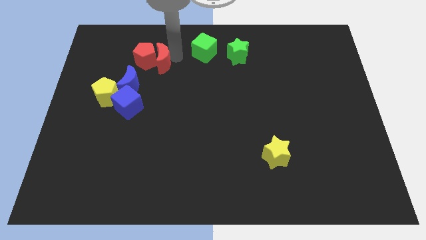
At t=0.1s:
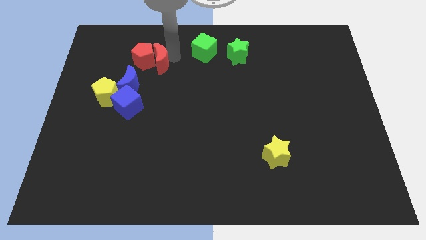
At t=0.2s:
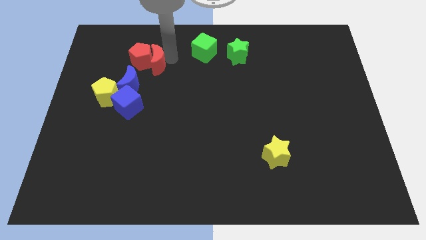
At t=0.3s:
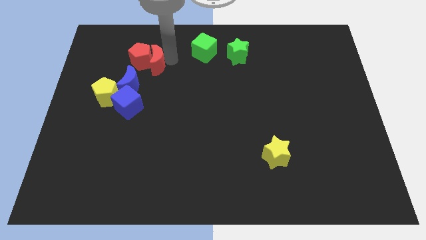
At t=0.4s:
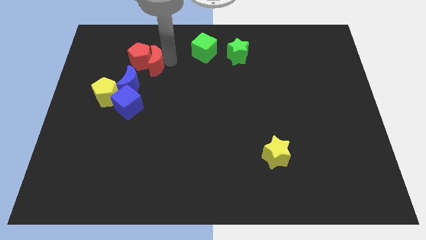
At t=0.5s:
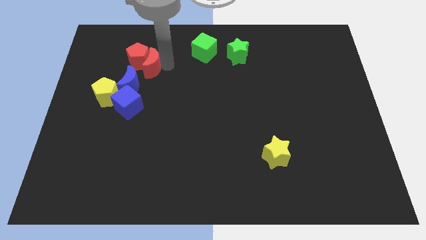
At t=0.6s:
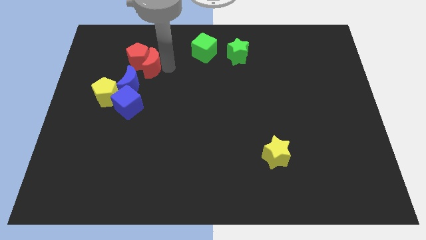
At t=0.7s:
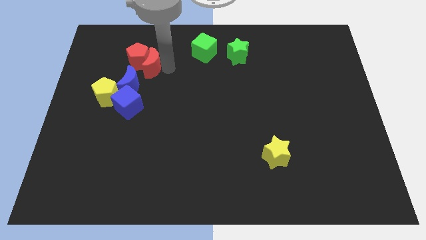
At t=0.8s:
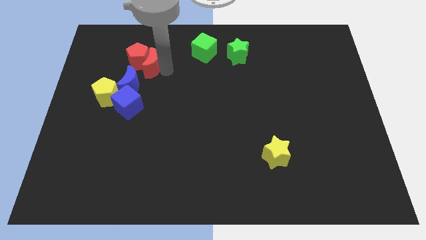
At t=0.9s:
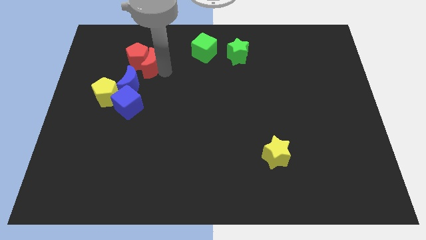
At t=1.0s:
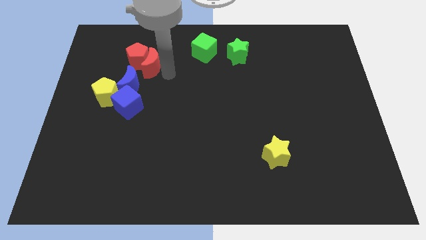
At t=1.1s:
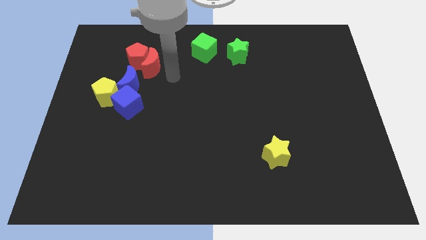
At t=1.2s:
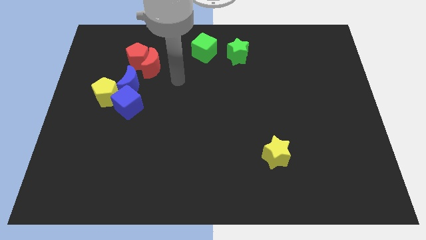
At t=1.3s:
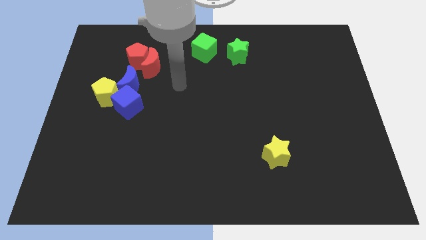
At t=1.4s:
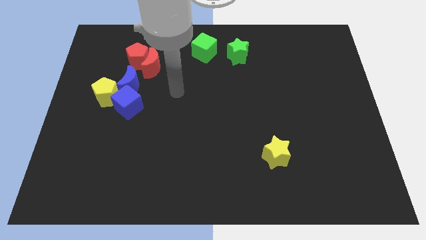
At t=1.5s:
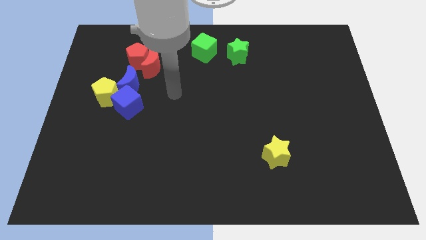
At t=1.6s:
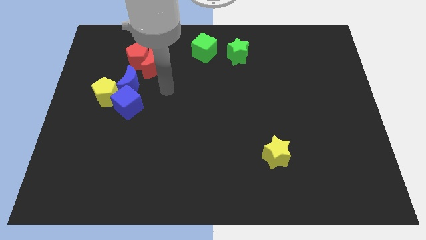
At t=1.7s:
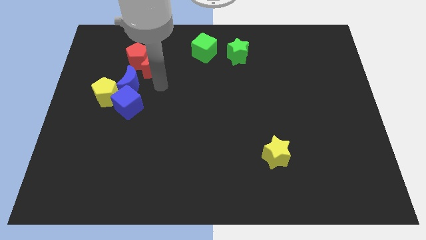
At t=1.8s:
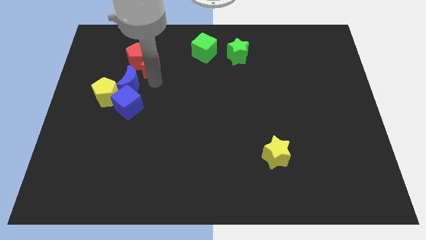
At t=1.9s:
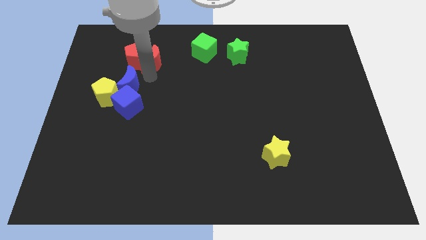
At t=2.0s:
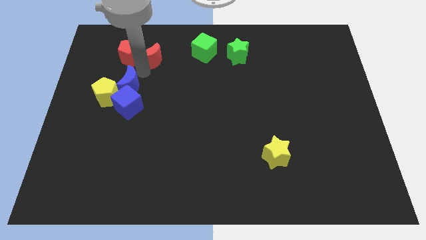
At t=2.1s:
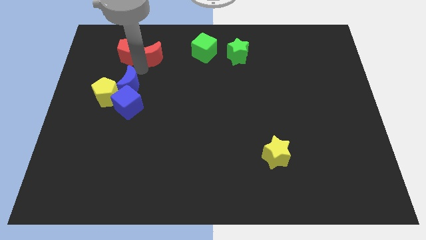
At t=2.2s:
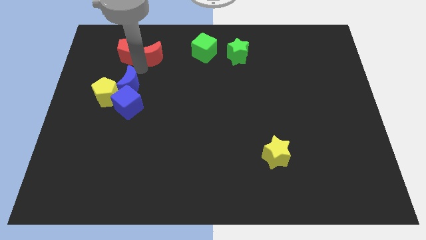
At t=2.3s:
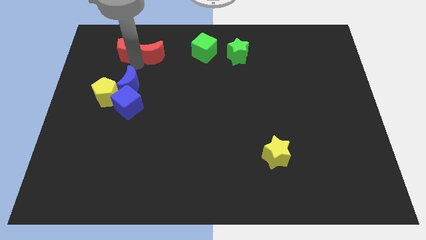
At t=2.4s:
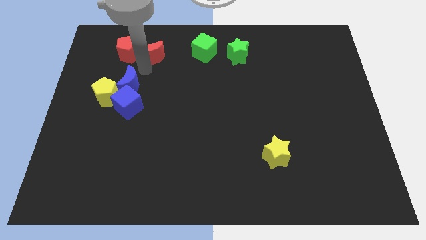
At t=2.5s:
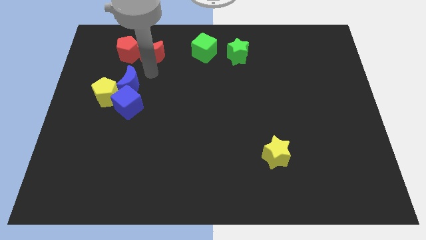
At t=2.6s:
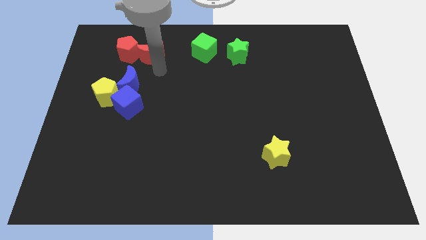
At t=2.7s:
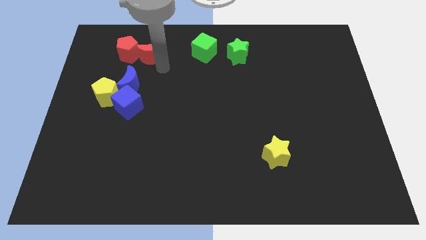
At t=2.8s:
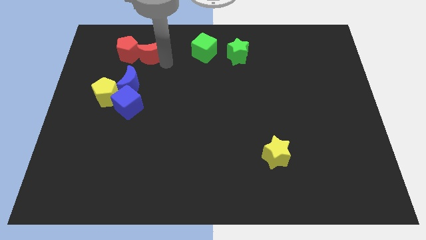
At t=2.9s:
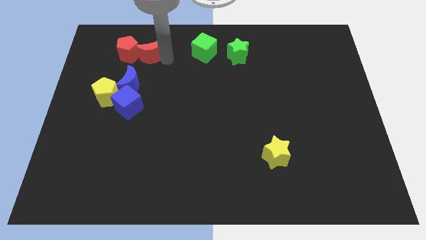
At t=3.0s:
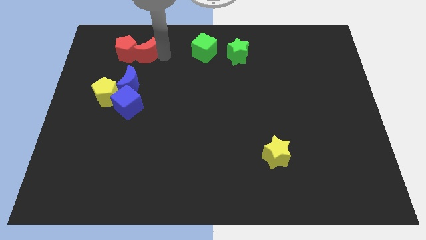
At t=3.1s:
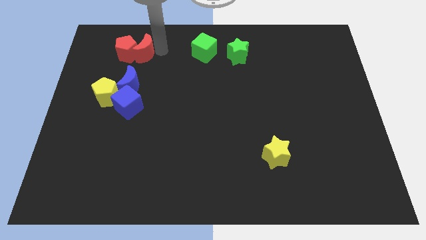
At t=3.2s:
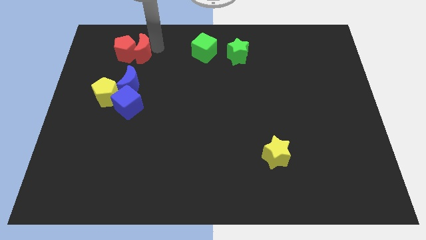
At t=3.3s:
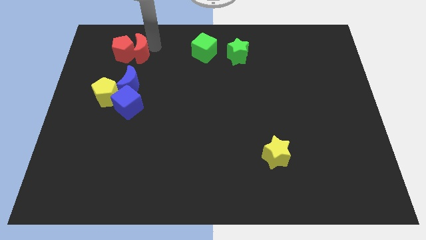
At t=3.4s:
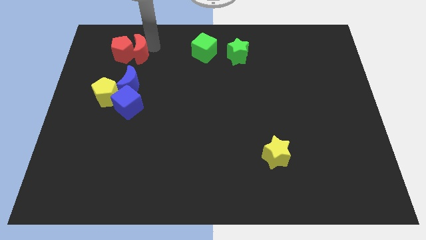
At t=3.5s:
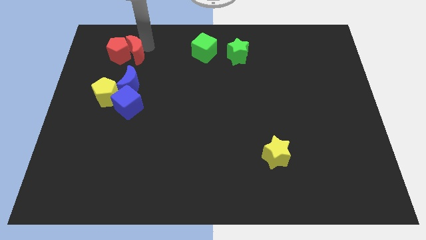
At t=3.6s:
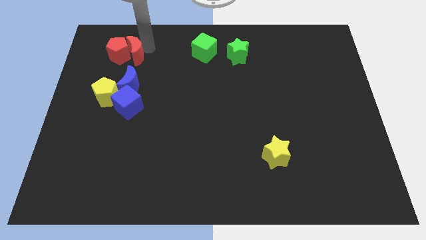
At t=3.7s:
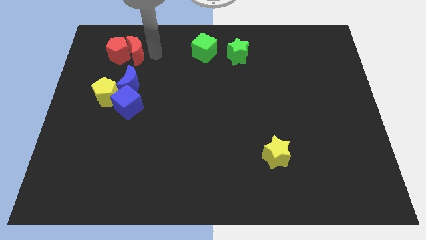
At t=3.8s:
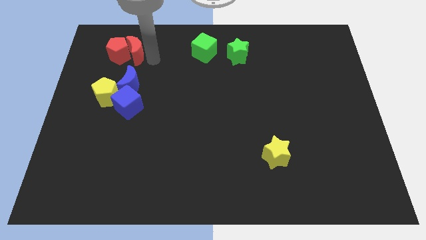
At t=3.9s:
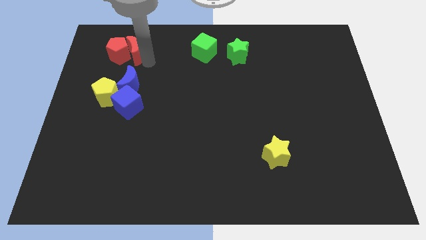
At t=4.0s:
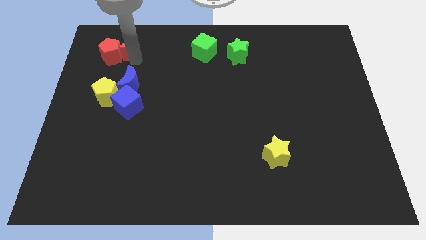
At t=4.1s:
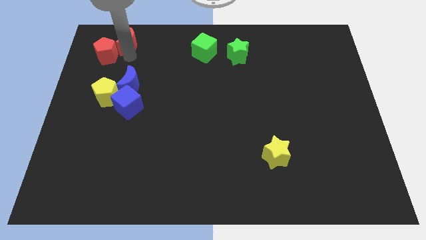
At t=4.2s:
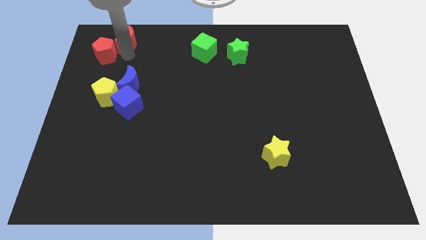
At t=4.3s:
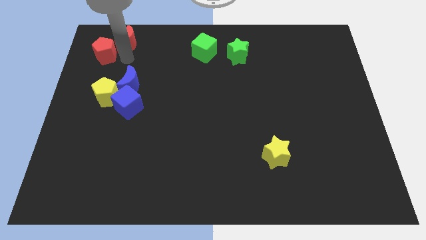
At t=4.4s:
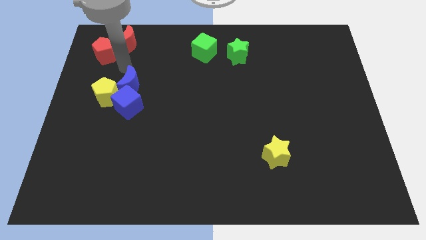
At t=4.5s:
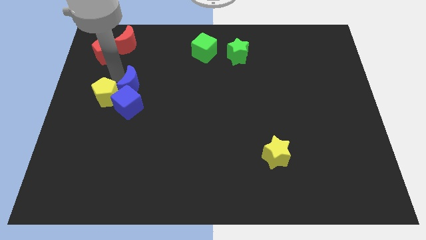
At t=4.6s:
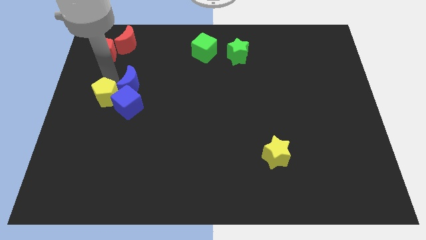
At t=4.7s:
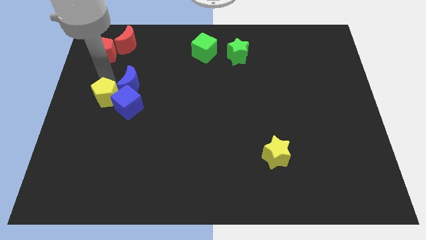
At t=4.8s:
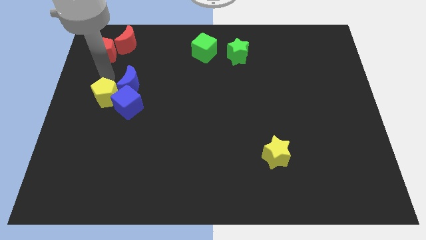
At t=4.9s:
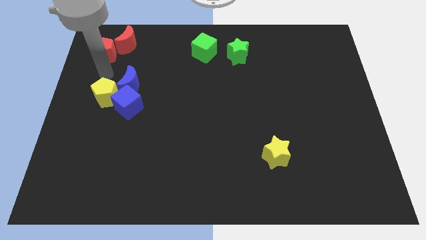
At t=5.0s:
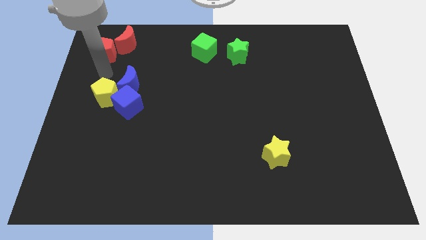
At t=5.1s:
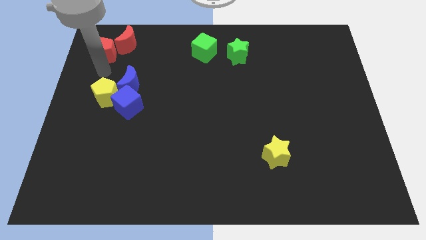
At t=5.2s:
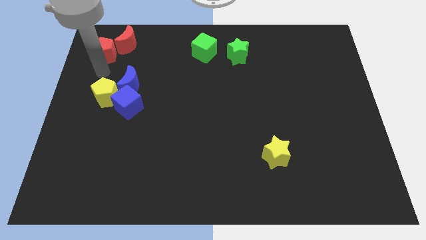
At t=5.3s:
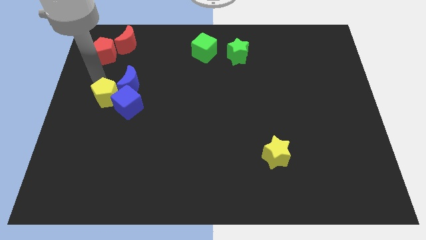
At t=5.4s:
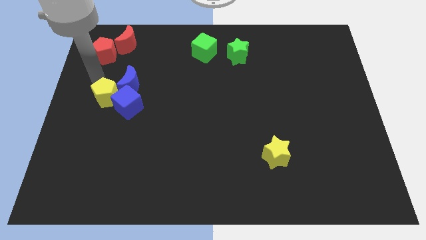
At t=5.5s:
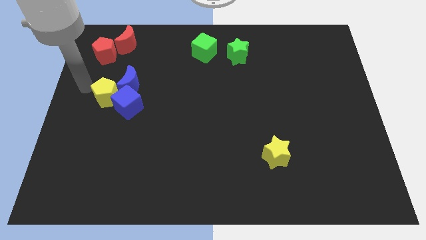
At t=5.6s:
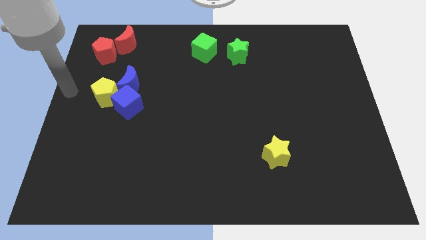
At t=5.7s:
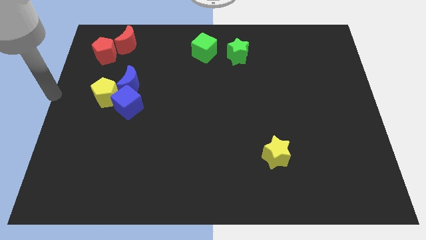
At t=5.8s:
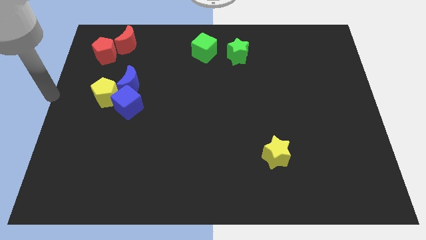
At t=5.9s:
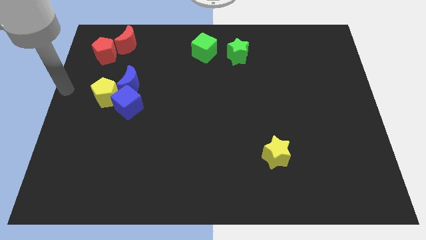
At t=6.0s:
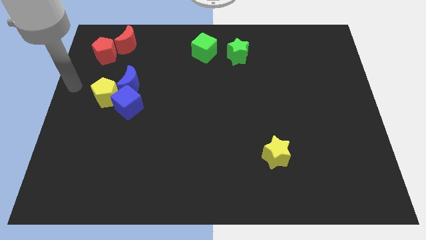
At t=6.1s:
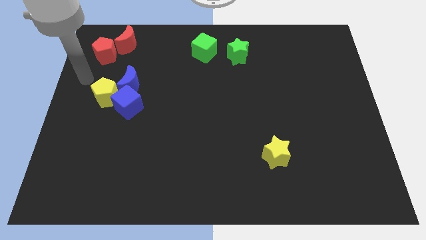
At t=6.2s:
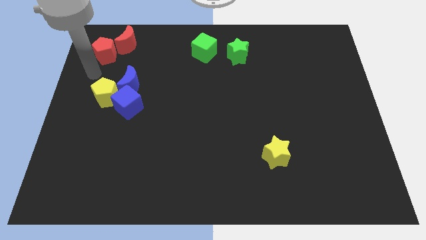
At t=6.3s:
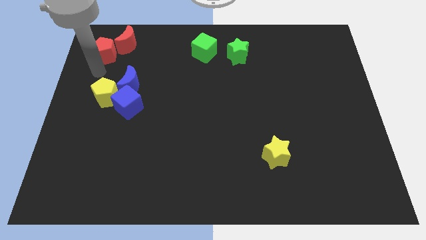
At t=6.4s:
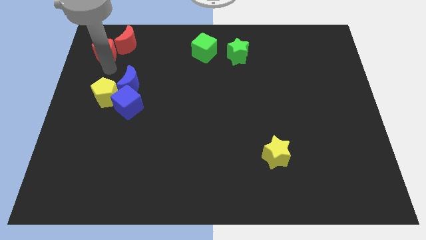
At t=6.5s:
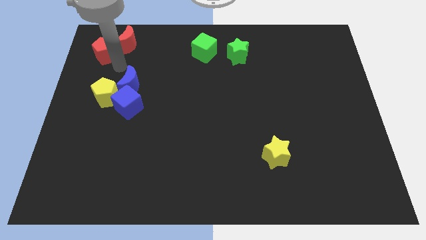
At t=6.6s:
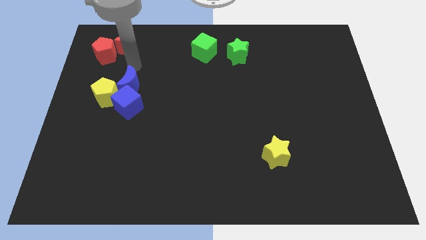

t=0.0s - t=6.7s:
push red moon and red pentagon to the top left corner of the board

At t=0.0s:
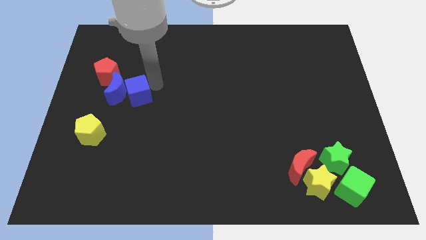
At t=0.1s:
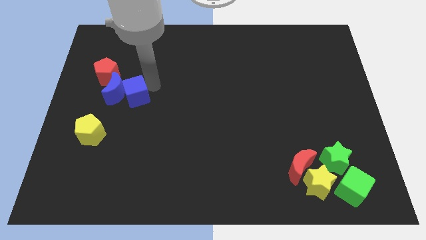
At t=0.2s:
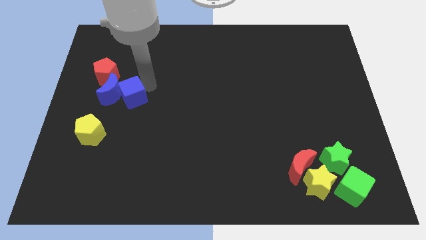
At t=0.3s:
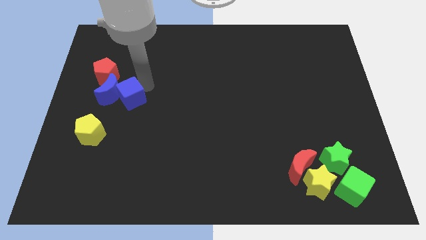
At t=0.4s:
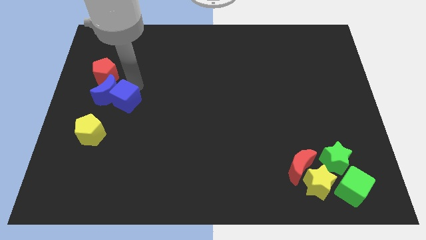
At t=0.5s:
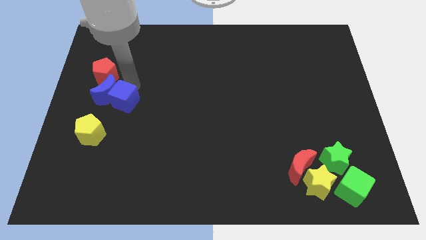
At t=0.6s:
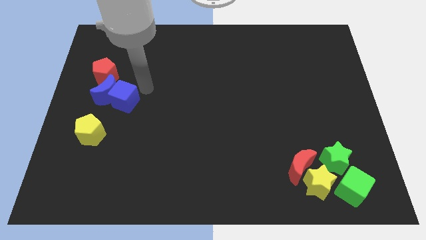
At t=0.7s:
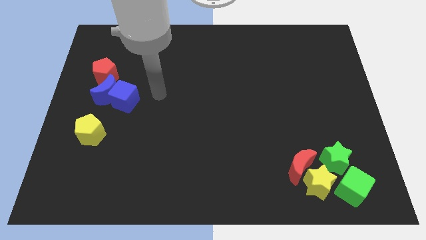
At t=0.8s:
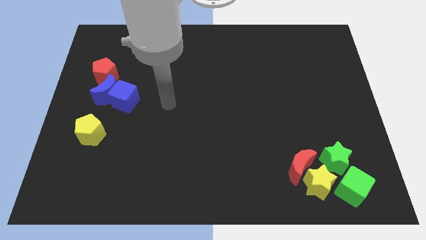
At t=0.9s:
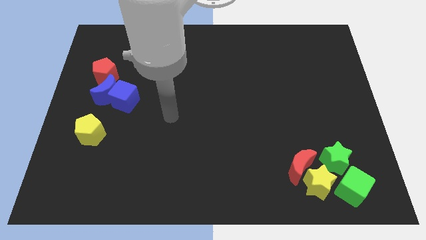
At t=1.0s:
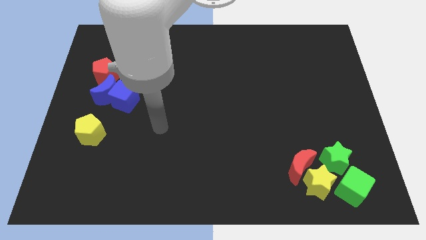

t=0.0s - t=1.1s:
push the blue crescent and blue cube into the red pentagon

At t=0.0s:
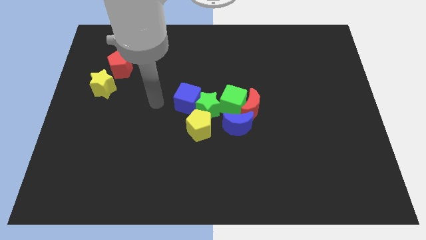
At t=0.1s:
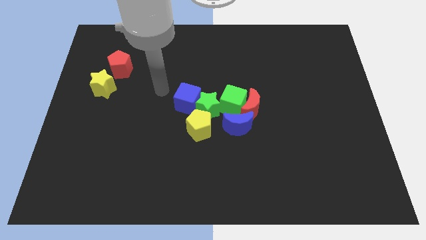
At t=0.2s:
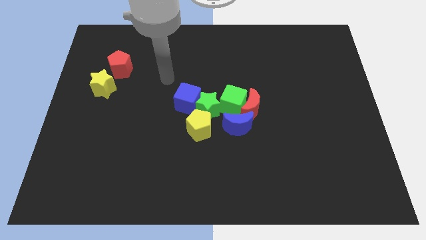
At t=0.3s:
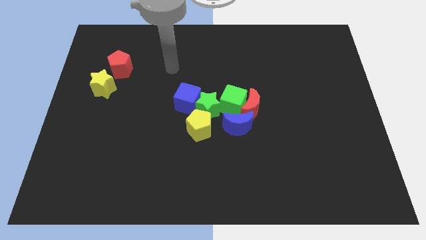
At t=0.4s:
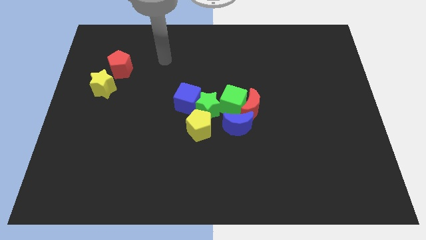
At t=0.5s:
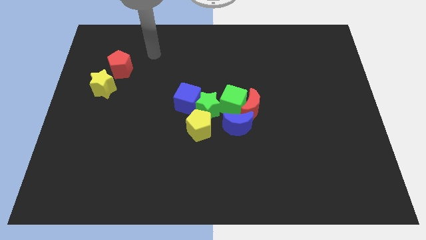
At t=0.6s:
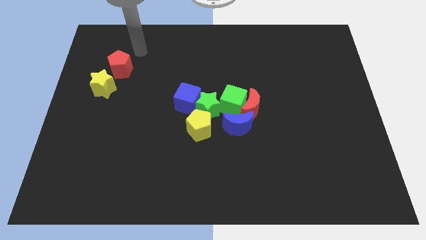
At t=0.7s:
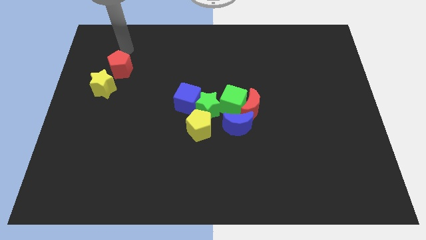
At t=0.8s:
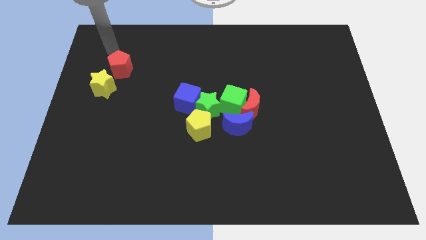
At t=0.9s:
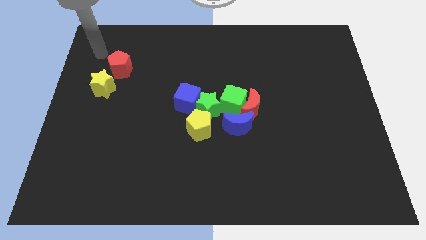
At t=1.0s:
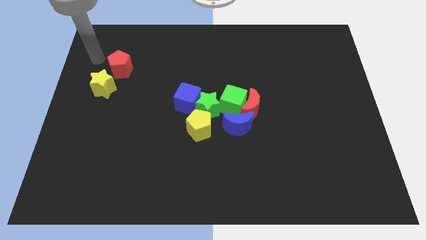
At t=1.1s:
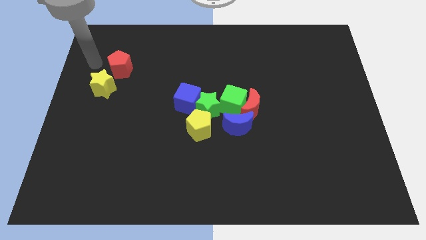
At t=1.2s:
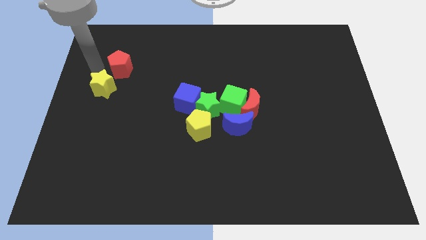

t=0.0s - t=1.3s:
place the pointer to the left of the red pentagon
